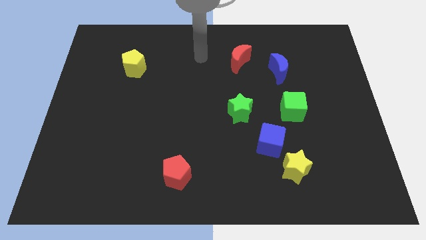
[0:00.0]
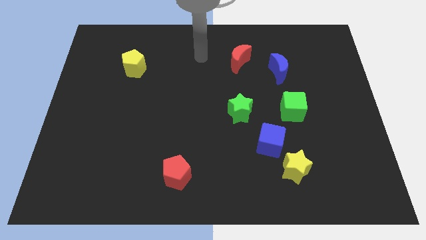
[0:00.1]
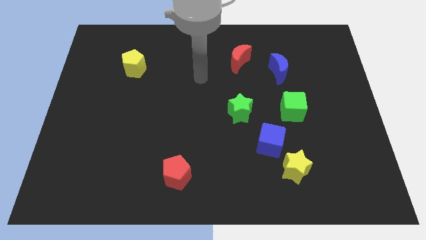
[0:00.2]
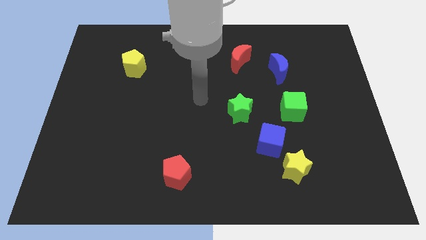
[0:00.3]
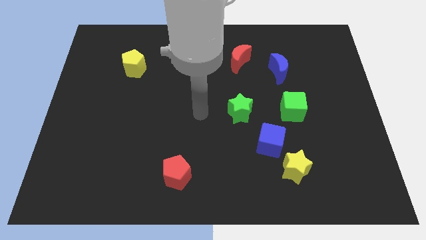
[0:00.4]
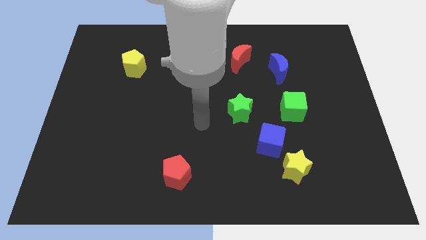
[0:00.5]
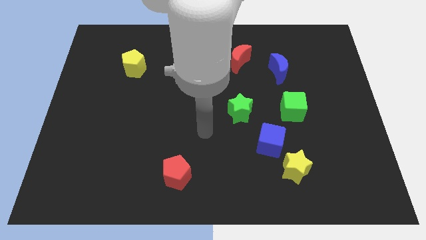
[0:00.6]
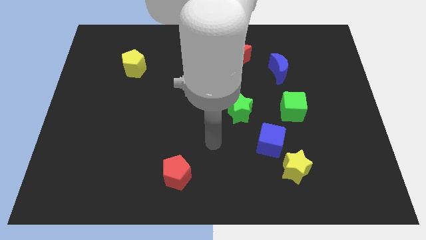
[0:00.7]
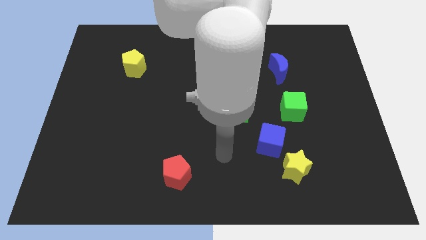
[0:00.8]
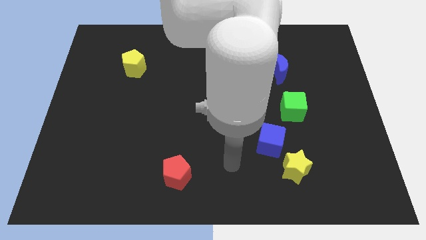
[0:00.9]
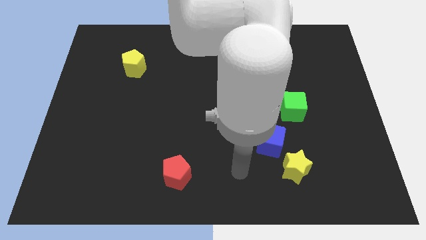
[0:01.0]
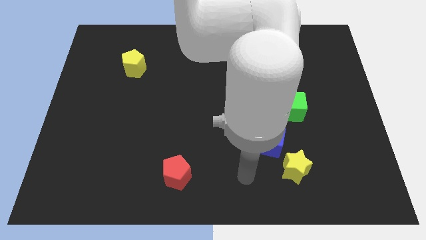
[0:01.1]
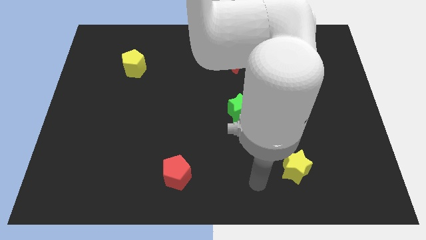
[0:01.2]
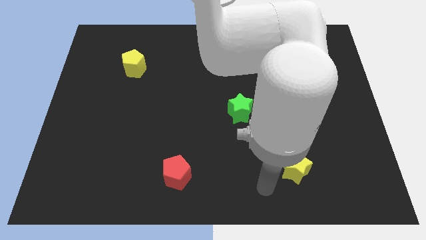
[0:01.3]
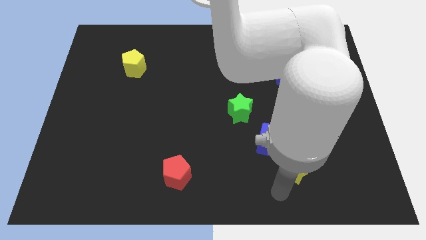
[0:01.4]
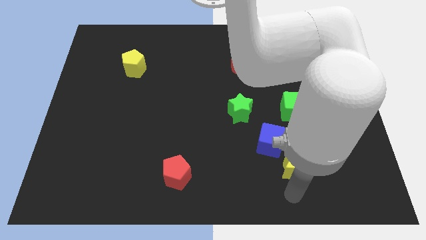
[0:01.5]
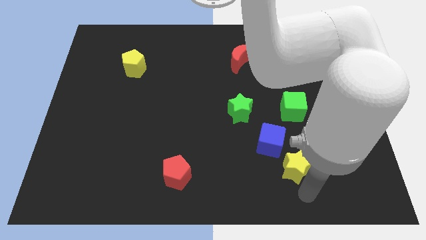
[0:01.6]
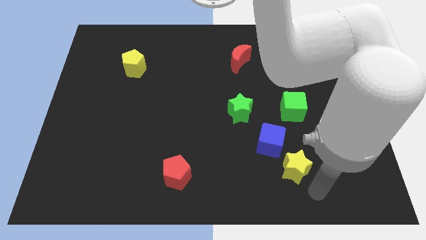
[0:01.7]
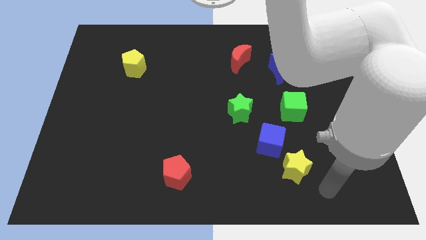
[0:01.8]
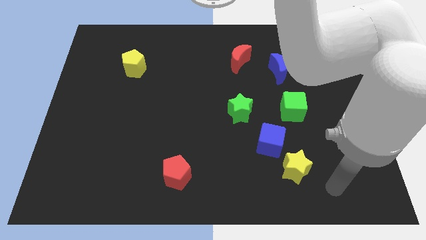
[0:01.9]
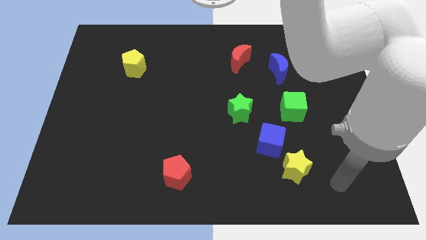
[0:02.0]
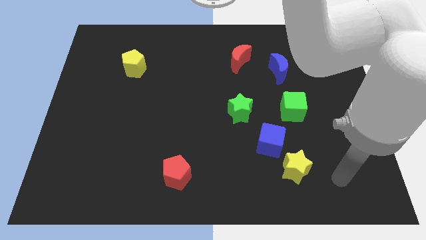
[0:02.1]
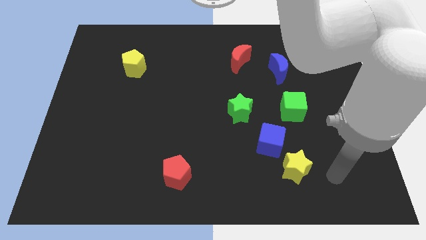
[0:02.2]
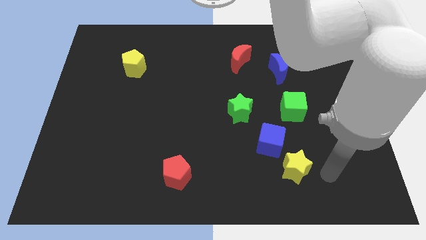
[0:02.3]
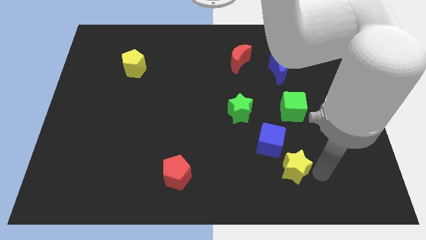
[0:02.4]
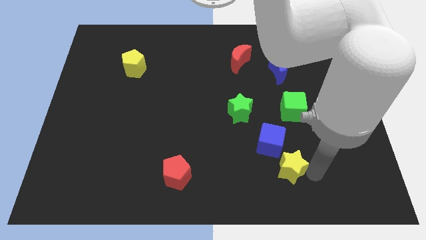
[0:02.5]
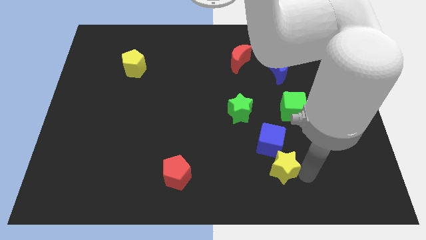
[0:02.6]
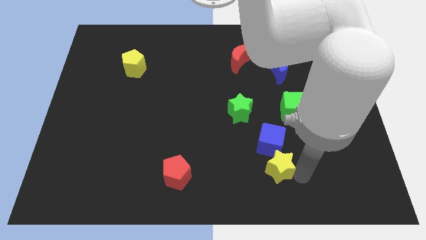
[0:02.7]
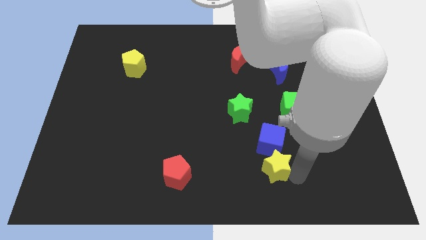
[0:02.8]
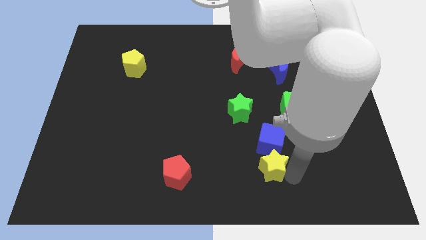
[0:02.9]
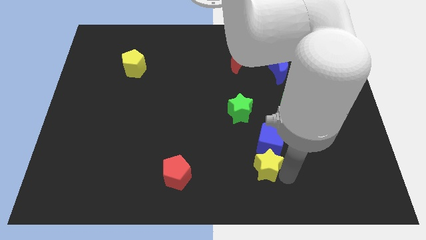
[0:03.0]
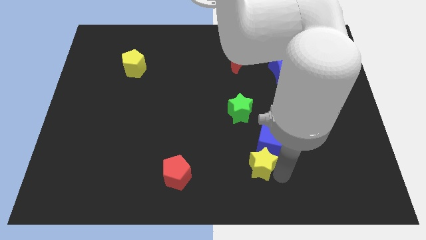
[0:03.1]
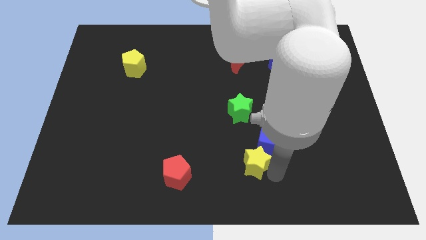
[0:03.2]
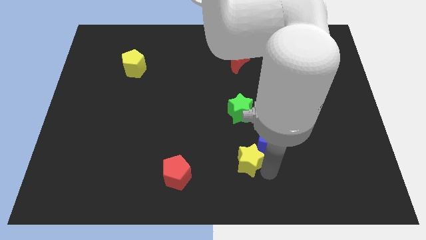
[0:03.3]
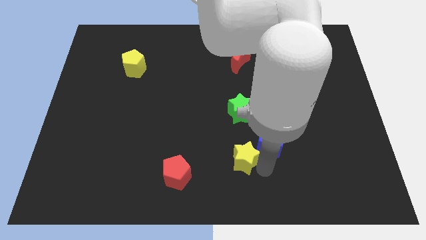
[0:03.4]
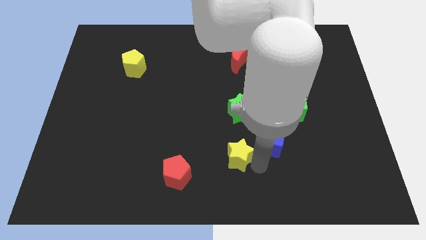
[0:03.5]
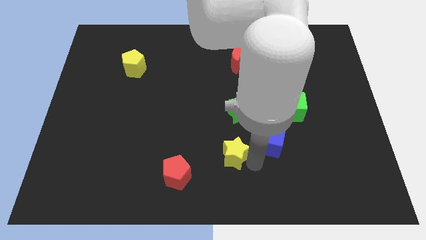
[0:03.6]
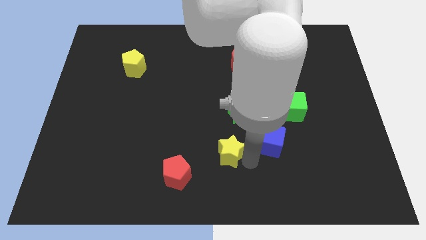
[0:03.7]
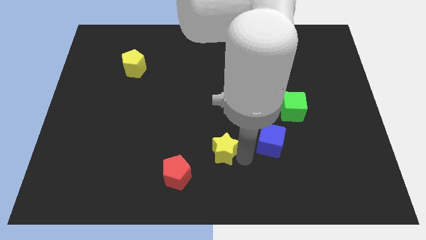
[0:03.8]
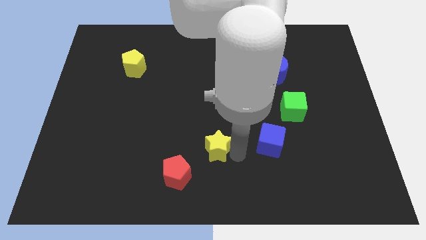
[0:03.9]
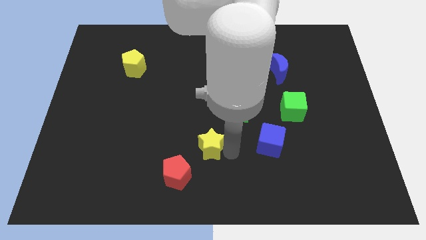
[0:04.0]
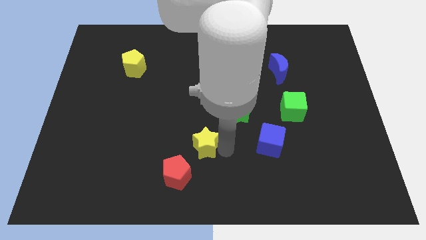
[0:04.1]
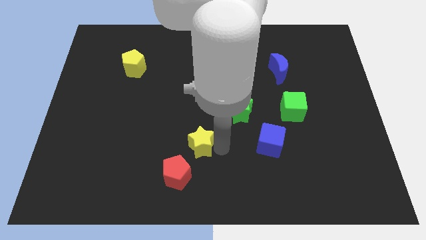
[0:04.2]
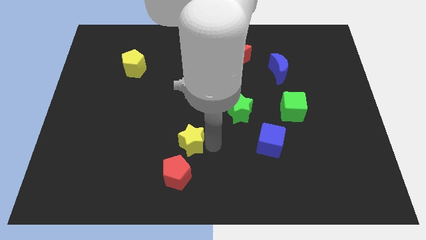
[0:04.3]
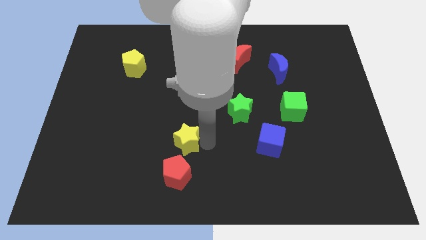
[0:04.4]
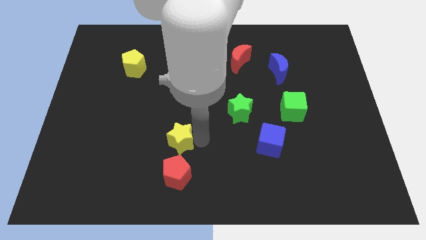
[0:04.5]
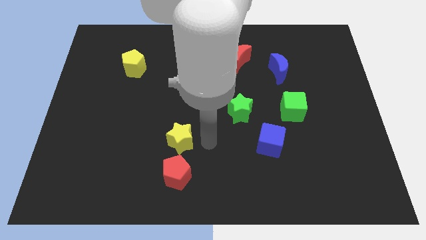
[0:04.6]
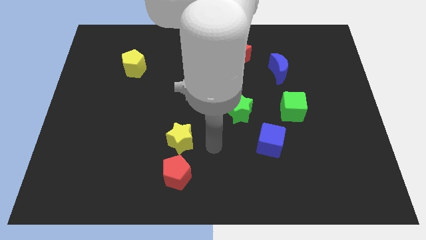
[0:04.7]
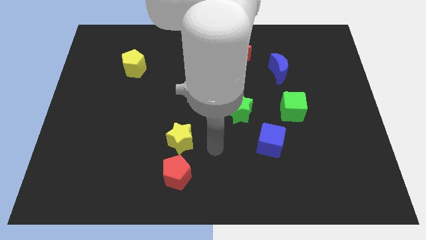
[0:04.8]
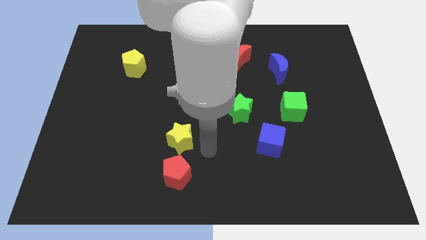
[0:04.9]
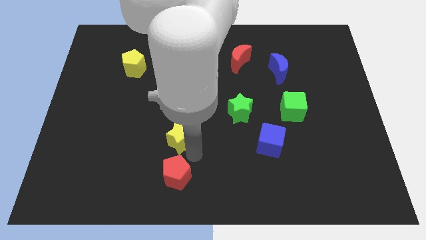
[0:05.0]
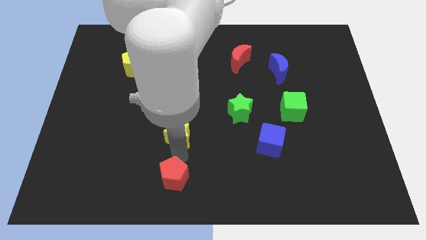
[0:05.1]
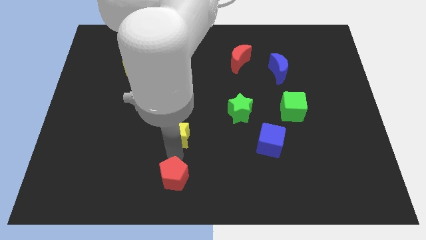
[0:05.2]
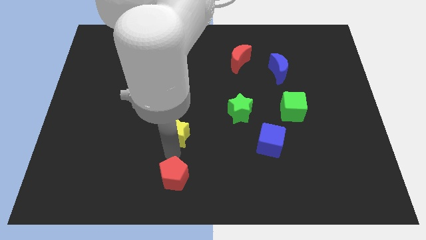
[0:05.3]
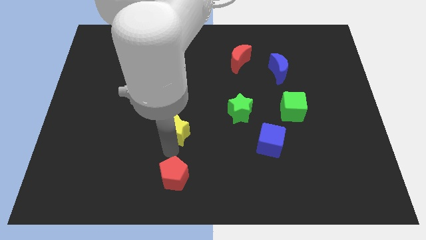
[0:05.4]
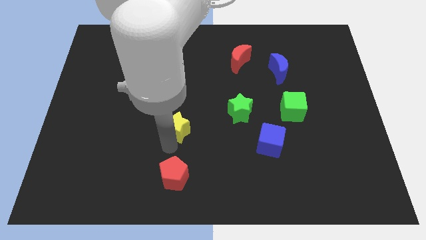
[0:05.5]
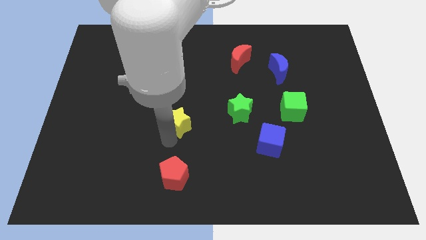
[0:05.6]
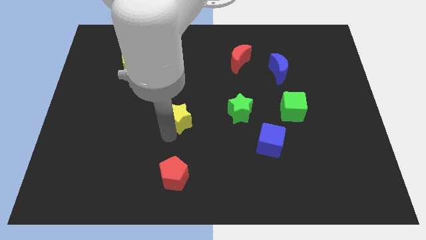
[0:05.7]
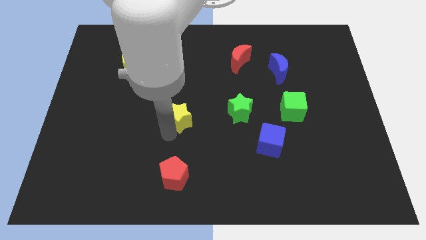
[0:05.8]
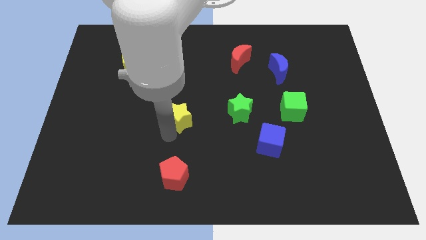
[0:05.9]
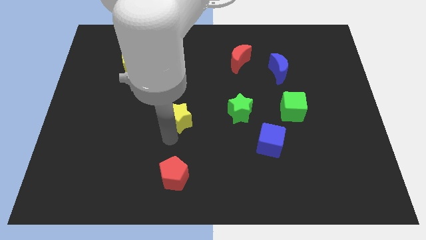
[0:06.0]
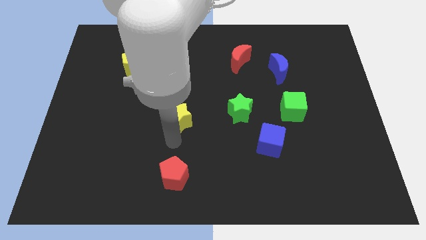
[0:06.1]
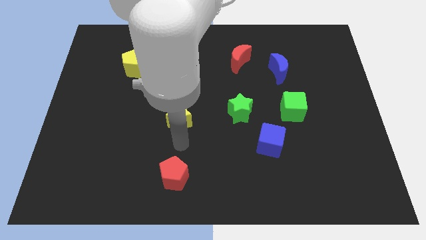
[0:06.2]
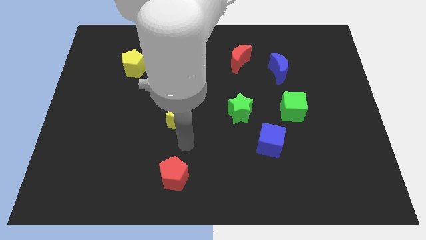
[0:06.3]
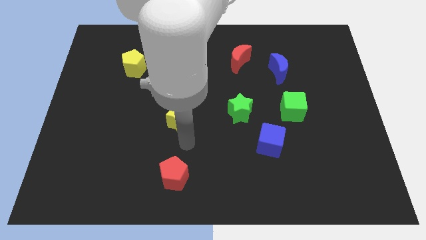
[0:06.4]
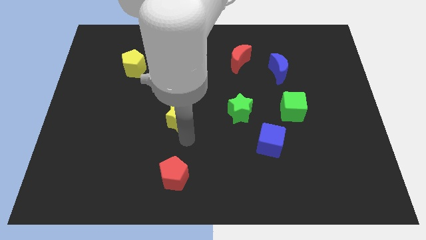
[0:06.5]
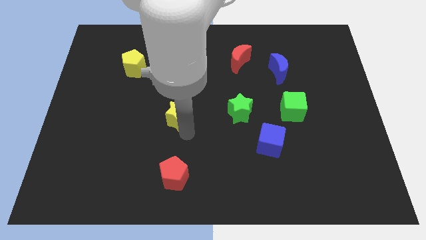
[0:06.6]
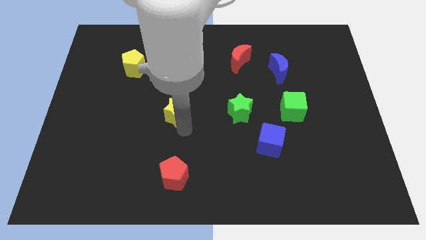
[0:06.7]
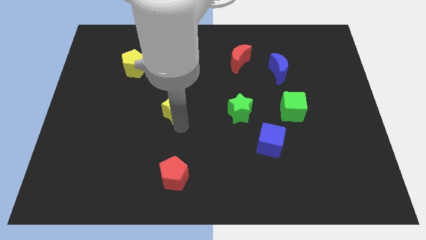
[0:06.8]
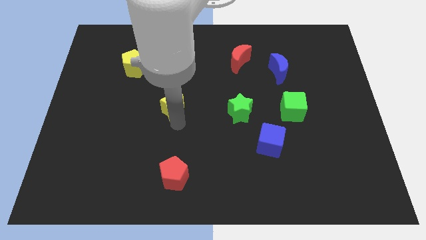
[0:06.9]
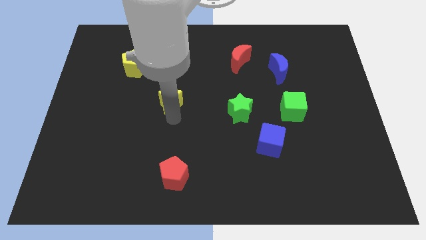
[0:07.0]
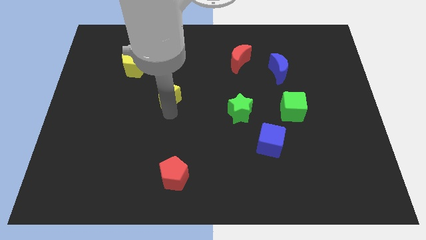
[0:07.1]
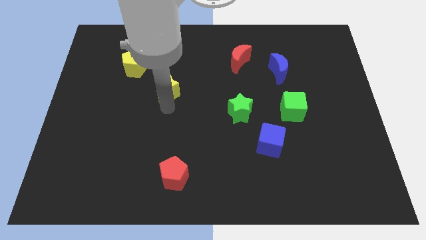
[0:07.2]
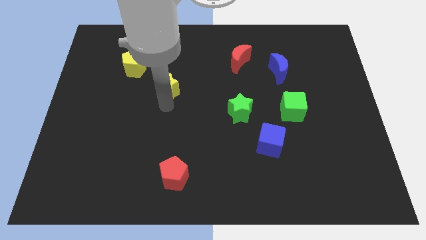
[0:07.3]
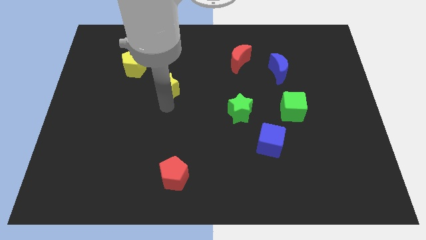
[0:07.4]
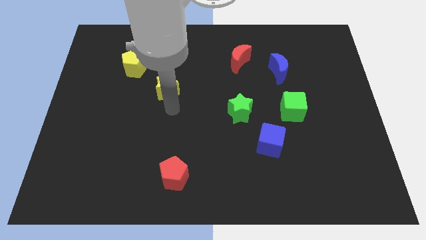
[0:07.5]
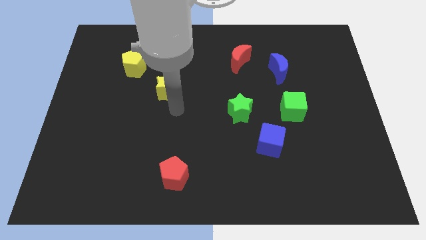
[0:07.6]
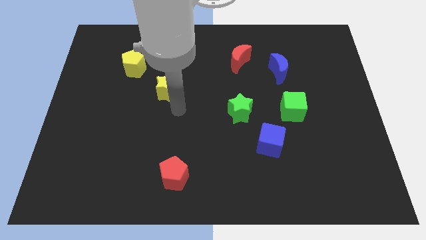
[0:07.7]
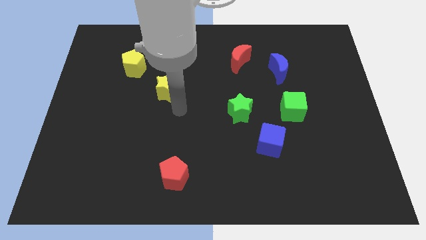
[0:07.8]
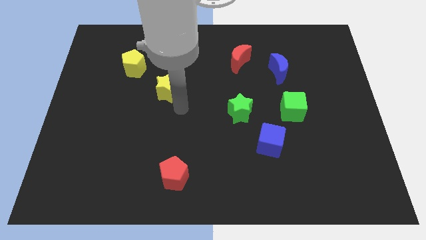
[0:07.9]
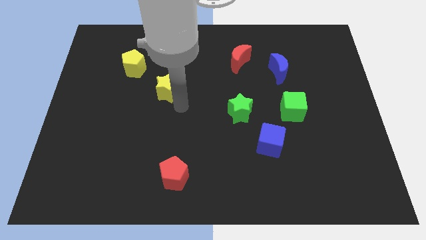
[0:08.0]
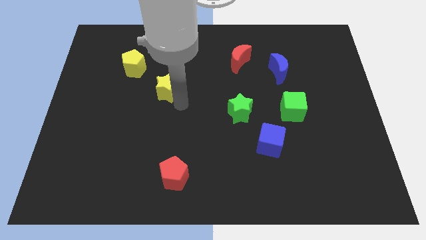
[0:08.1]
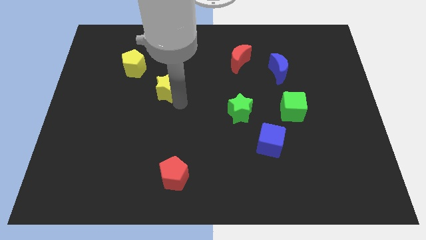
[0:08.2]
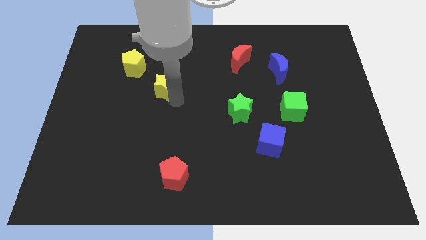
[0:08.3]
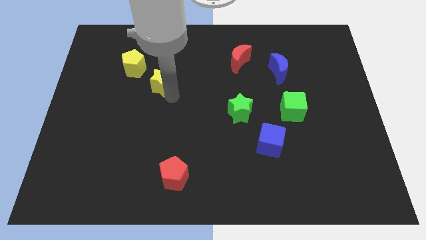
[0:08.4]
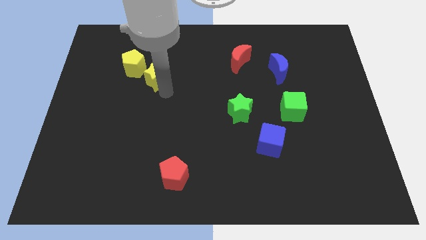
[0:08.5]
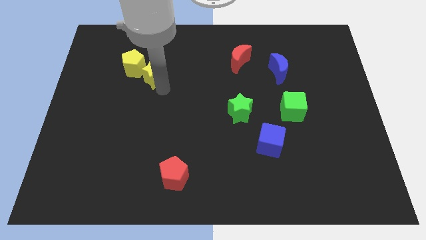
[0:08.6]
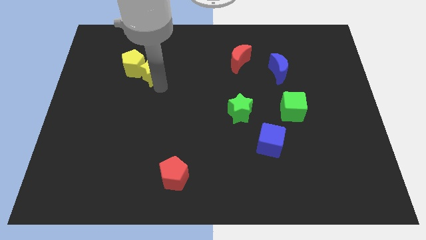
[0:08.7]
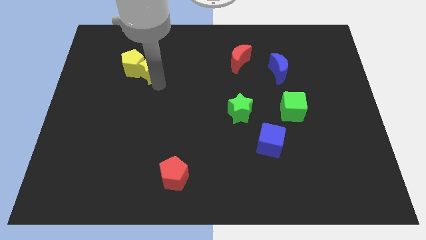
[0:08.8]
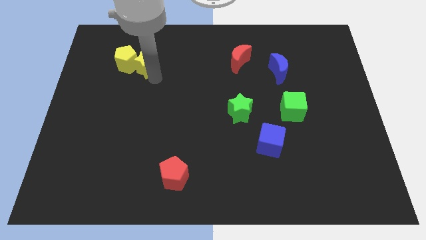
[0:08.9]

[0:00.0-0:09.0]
put the yellow star next to the yellow pentagon
